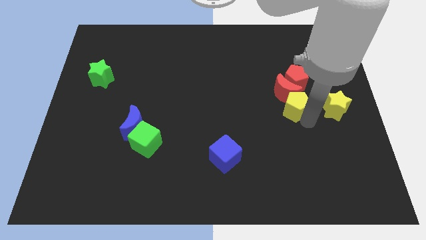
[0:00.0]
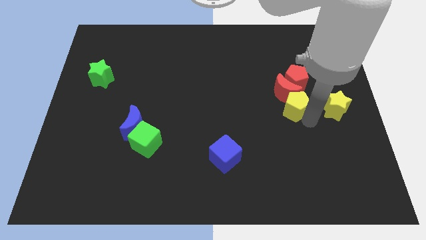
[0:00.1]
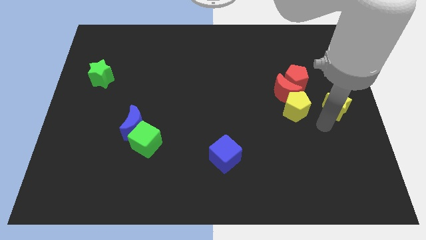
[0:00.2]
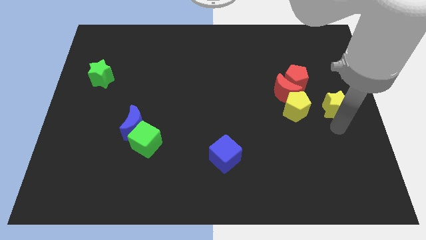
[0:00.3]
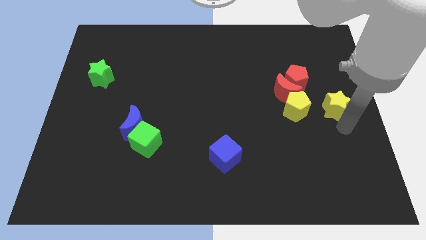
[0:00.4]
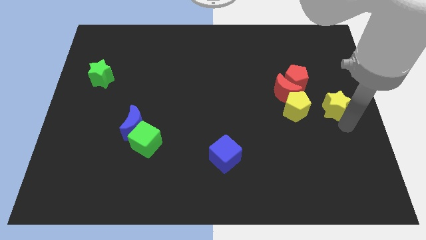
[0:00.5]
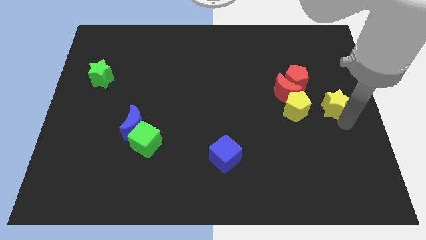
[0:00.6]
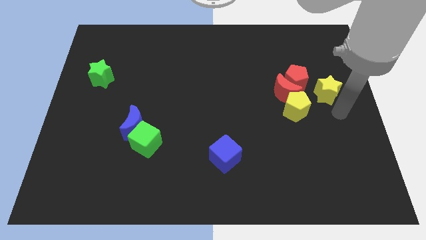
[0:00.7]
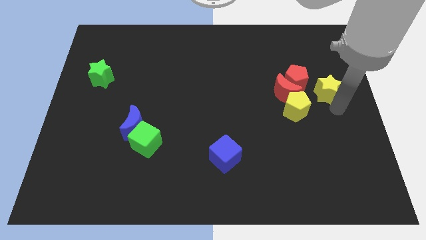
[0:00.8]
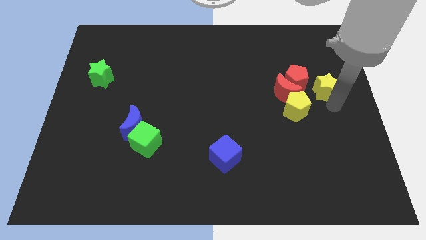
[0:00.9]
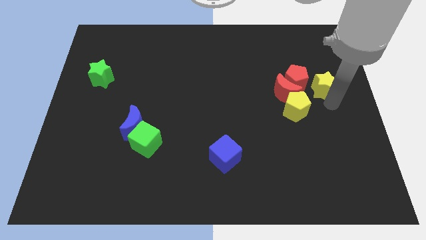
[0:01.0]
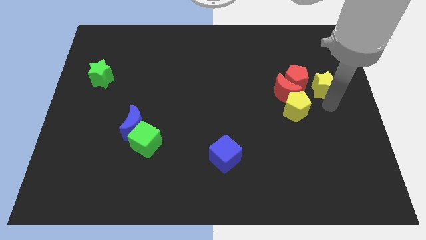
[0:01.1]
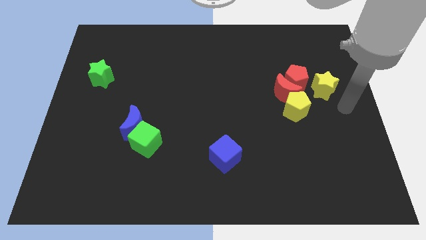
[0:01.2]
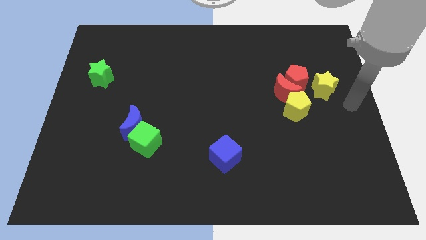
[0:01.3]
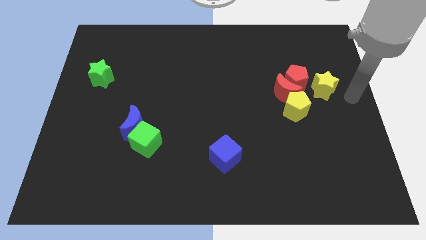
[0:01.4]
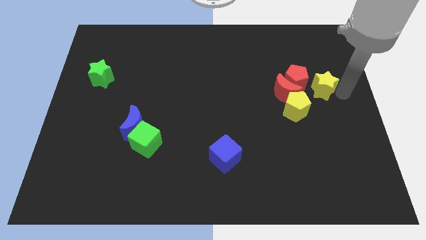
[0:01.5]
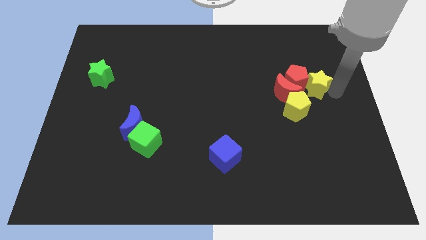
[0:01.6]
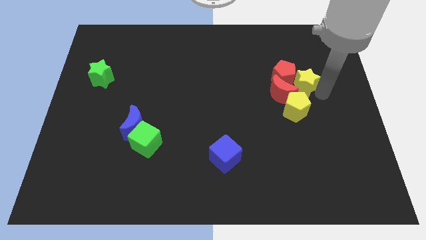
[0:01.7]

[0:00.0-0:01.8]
move the yellow star into the red pentagon

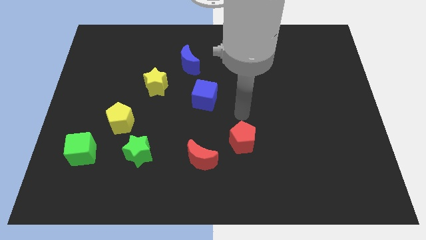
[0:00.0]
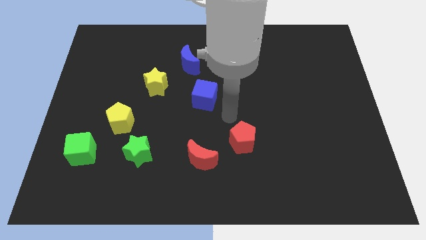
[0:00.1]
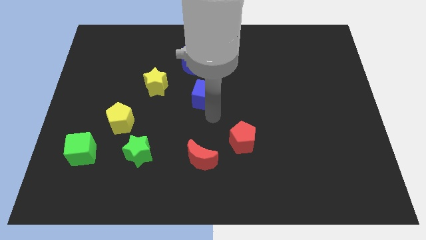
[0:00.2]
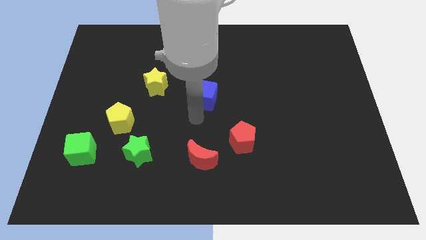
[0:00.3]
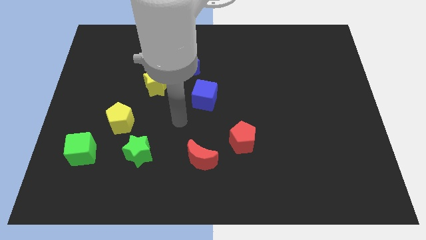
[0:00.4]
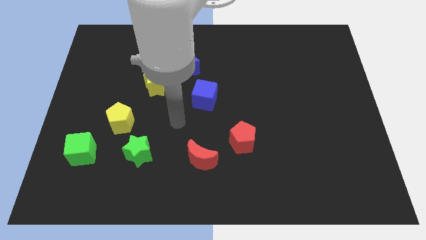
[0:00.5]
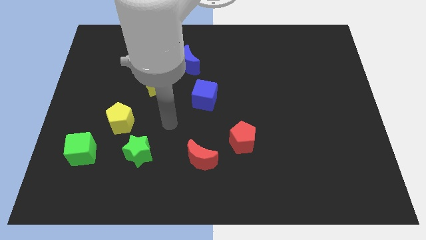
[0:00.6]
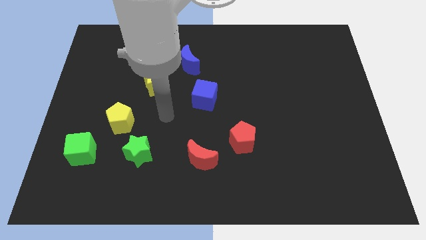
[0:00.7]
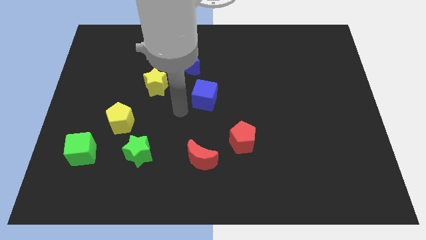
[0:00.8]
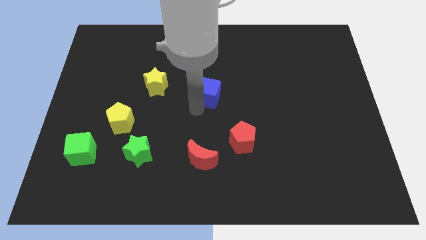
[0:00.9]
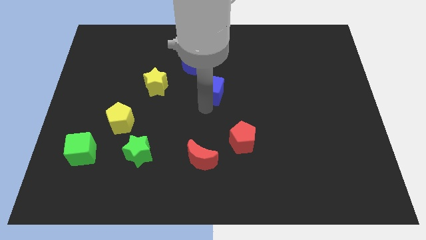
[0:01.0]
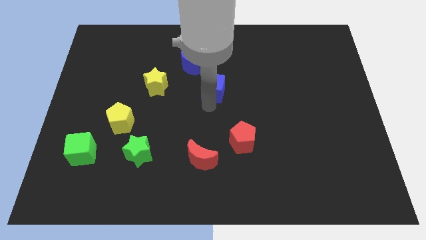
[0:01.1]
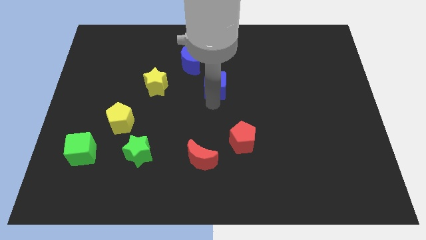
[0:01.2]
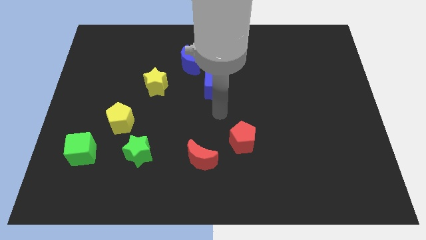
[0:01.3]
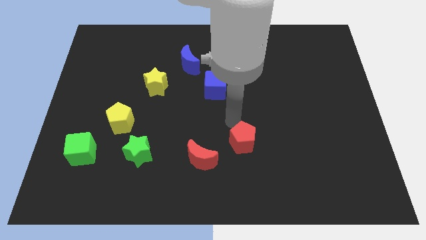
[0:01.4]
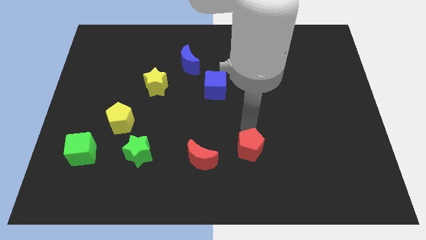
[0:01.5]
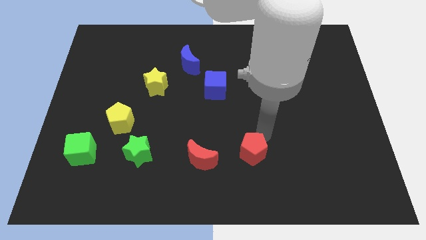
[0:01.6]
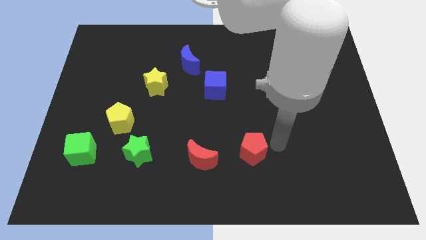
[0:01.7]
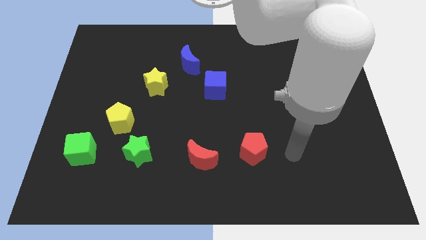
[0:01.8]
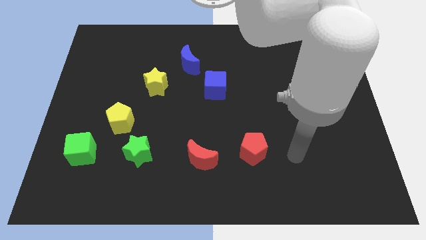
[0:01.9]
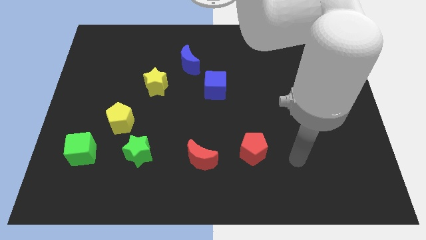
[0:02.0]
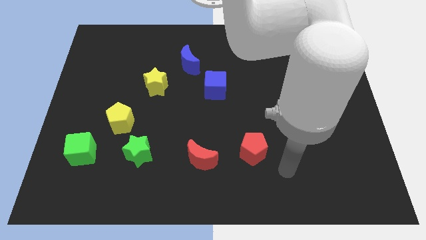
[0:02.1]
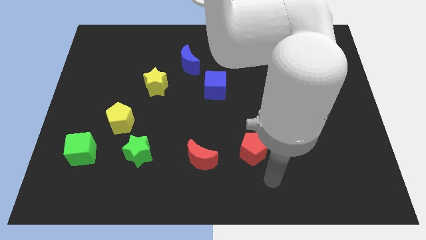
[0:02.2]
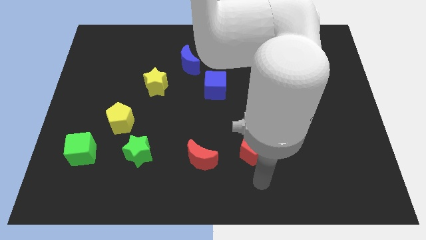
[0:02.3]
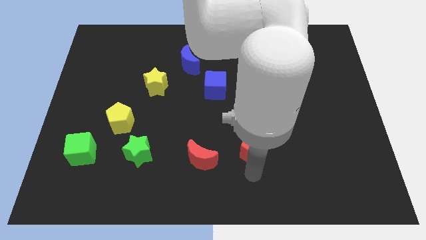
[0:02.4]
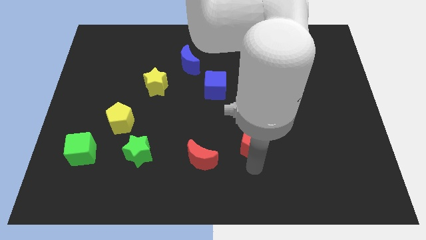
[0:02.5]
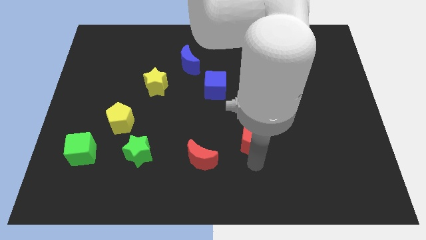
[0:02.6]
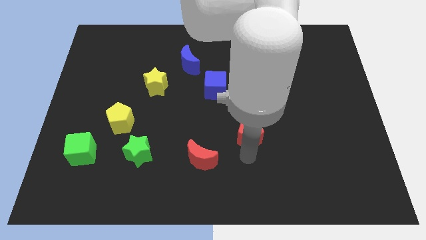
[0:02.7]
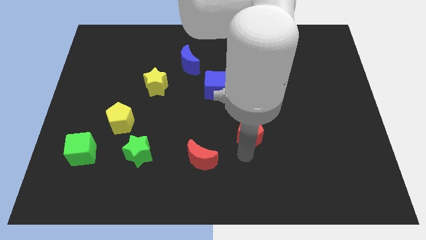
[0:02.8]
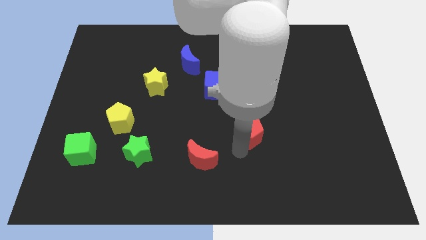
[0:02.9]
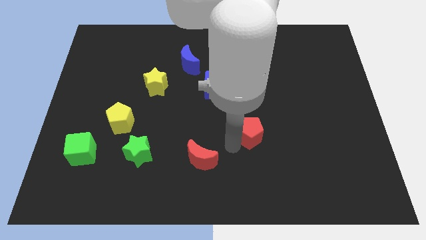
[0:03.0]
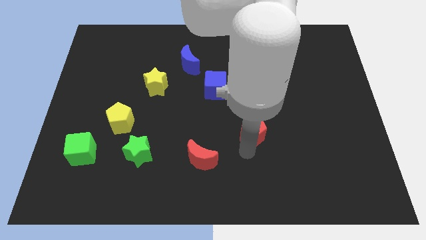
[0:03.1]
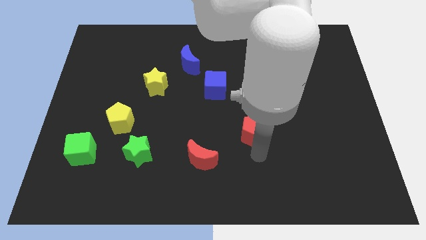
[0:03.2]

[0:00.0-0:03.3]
move the red pentagon diagonally to the blue cube

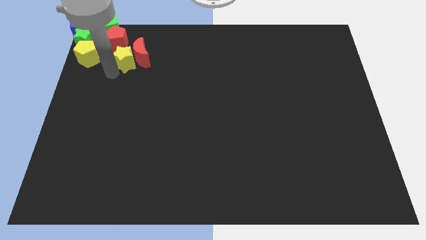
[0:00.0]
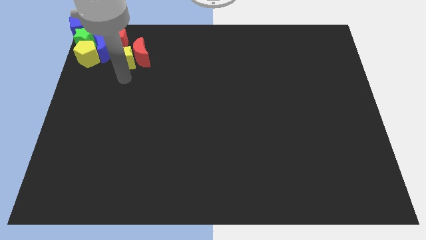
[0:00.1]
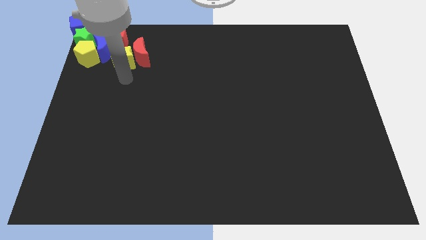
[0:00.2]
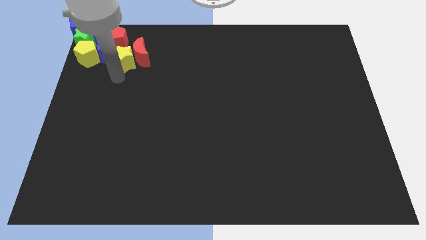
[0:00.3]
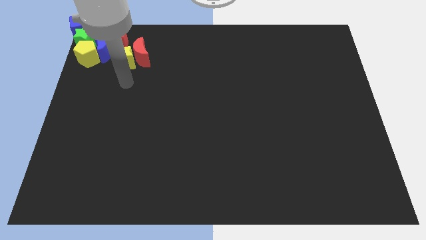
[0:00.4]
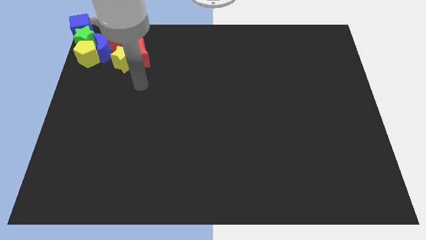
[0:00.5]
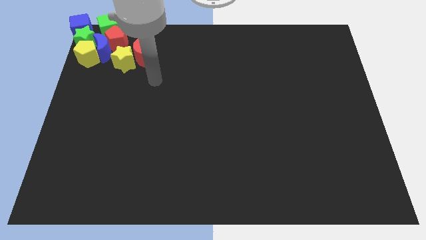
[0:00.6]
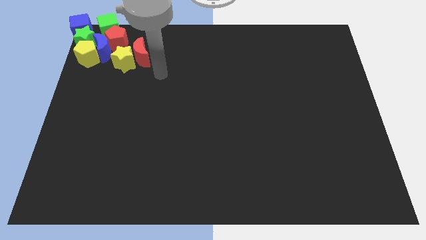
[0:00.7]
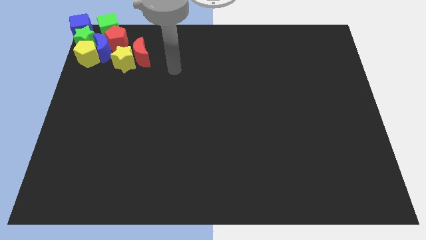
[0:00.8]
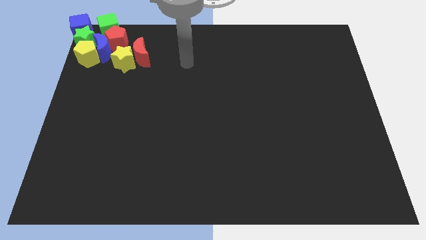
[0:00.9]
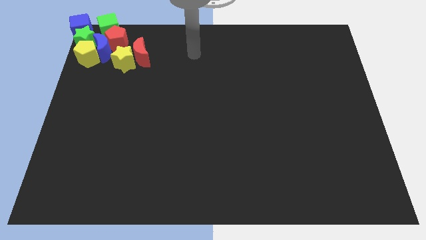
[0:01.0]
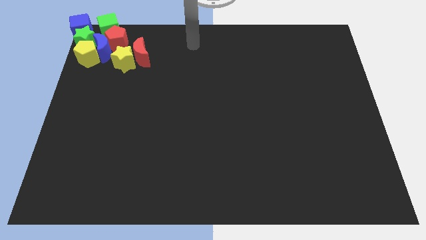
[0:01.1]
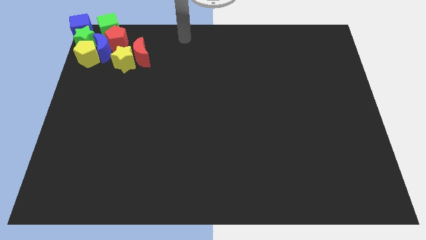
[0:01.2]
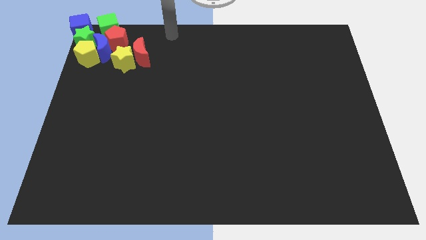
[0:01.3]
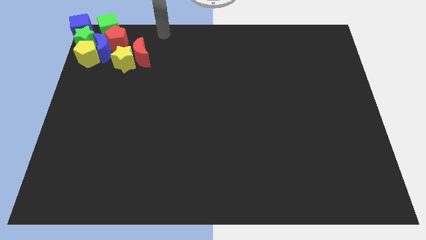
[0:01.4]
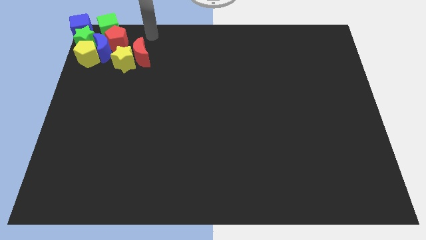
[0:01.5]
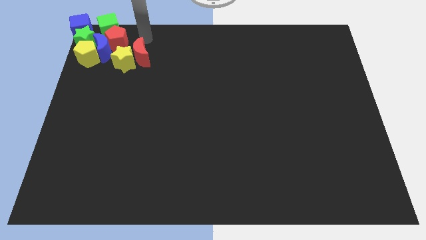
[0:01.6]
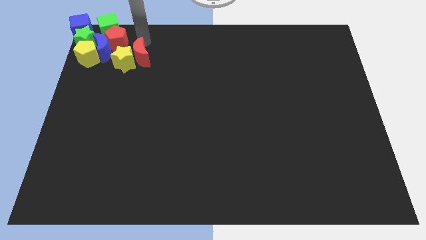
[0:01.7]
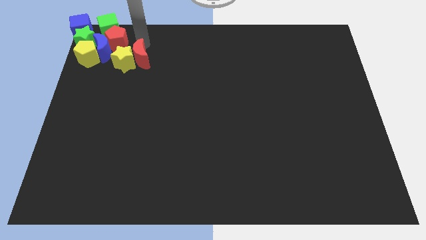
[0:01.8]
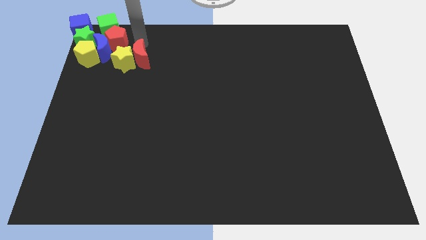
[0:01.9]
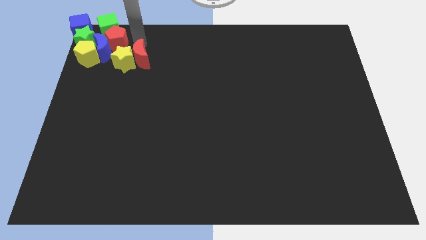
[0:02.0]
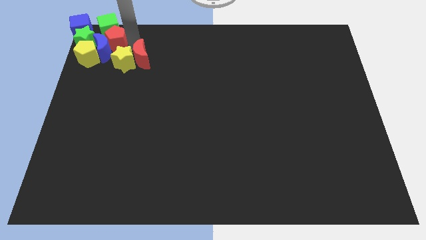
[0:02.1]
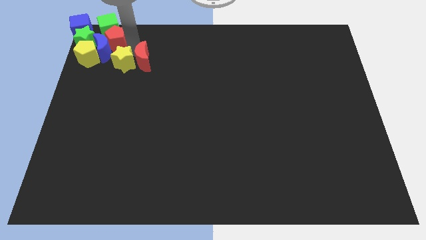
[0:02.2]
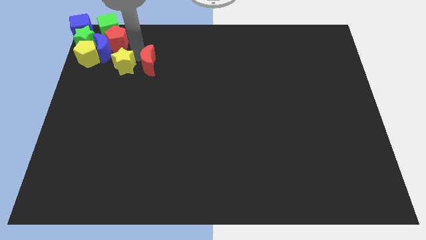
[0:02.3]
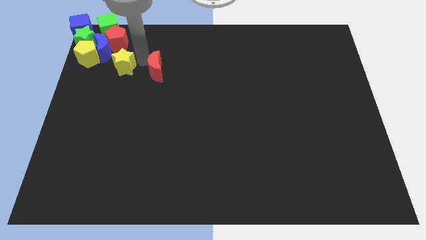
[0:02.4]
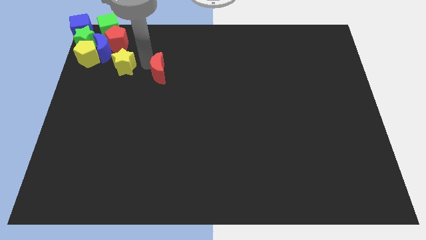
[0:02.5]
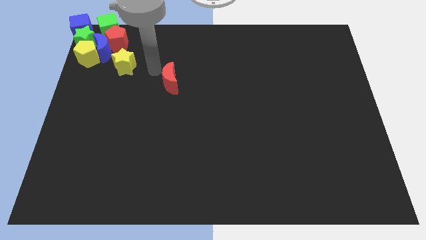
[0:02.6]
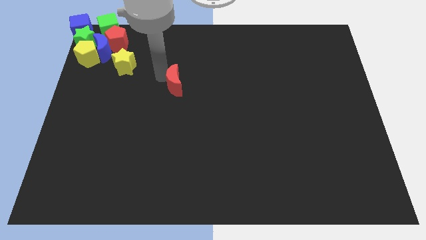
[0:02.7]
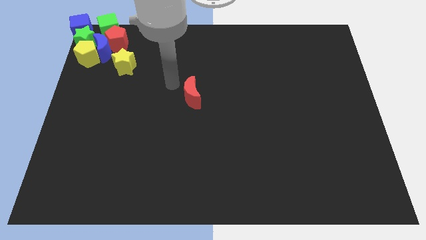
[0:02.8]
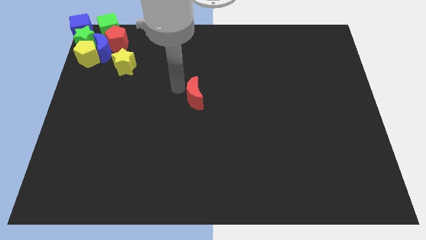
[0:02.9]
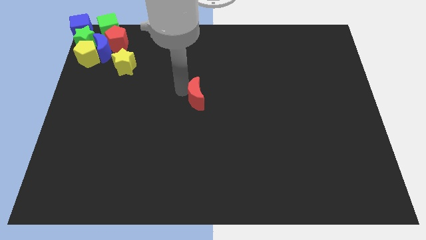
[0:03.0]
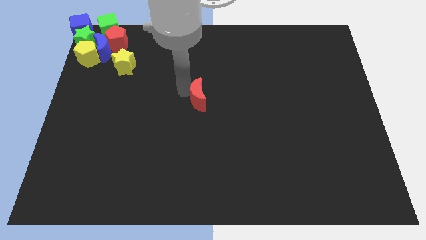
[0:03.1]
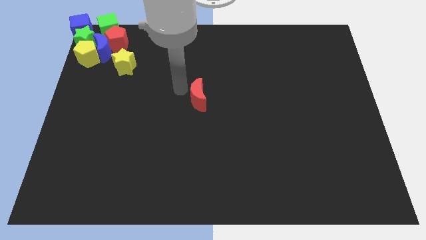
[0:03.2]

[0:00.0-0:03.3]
move the red moon to the center

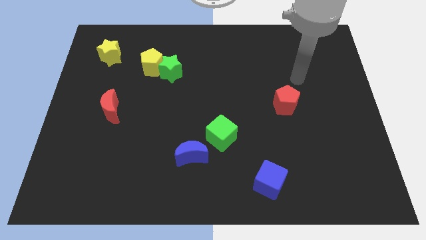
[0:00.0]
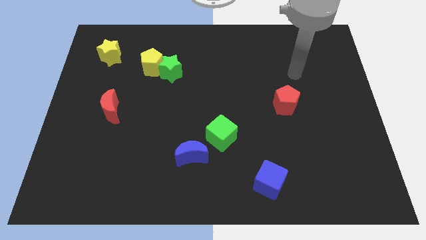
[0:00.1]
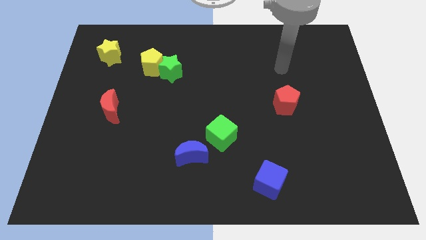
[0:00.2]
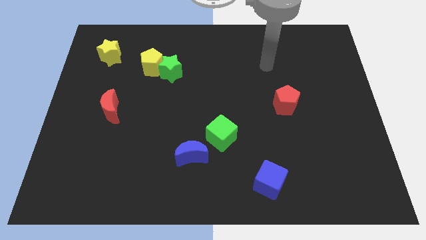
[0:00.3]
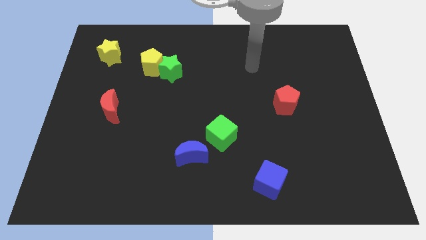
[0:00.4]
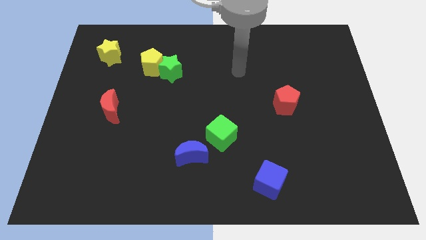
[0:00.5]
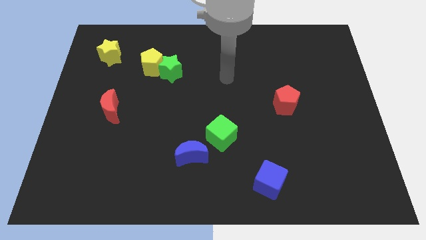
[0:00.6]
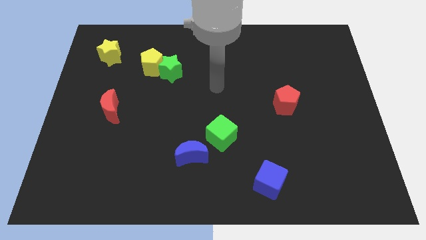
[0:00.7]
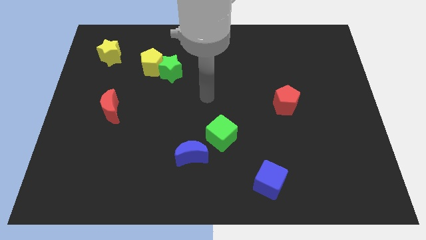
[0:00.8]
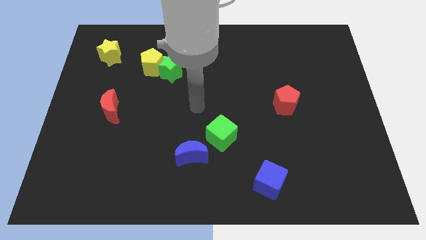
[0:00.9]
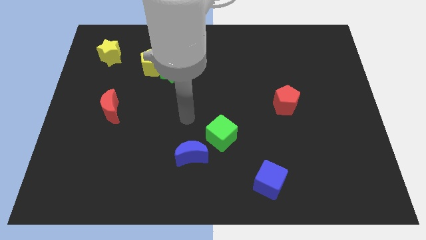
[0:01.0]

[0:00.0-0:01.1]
point your arm above the blue moon
